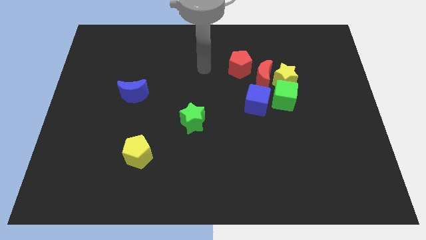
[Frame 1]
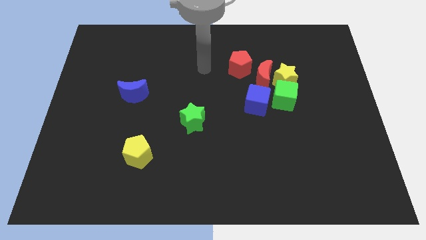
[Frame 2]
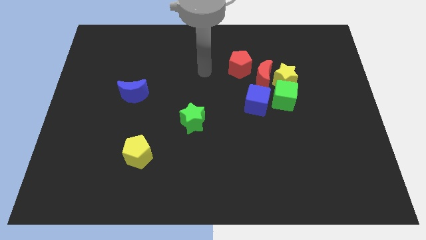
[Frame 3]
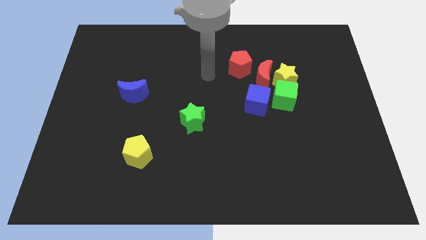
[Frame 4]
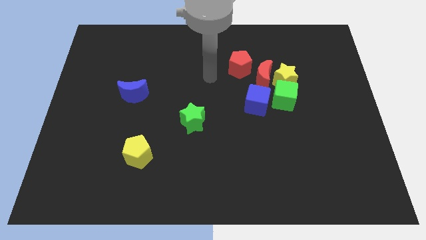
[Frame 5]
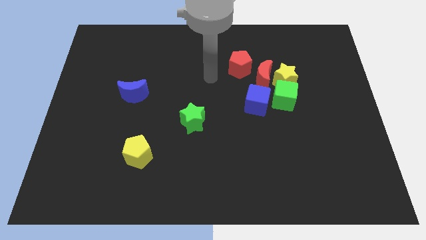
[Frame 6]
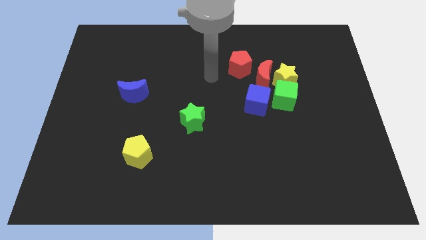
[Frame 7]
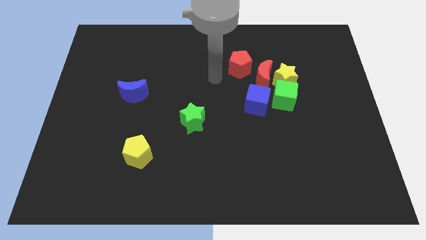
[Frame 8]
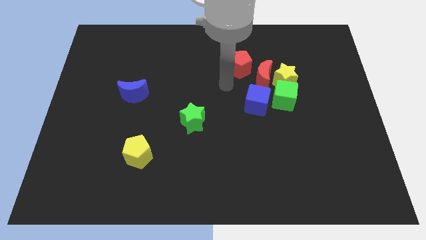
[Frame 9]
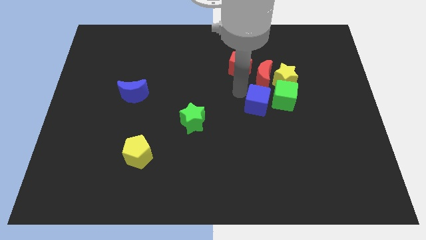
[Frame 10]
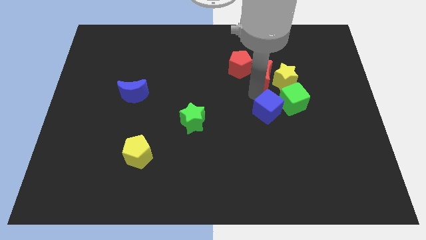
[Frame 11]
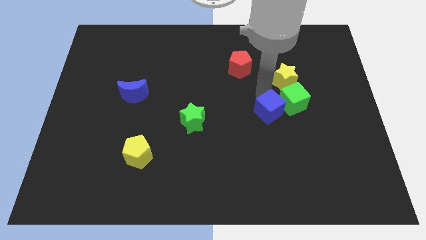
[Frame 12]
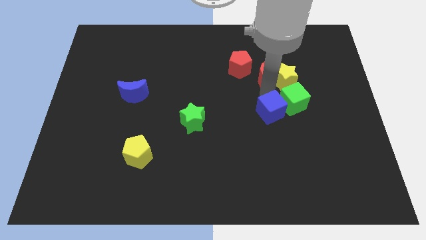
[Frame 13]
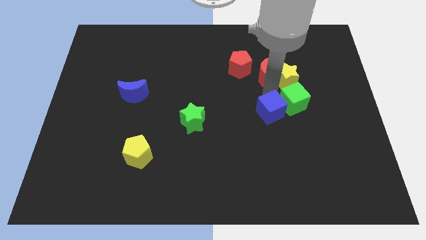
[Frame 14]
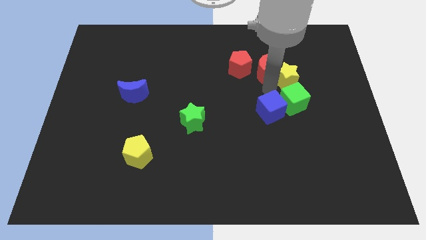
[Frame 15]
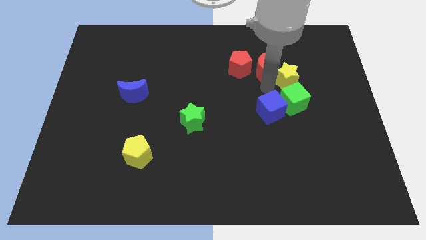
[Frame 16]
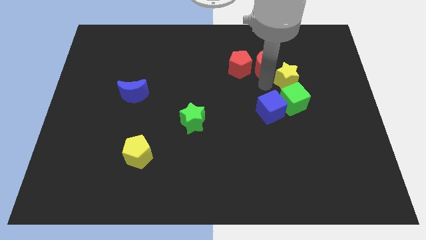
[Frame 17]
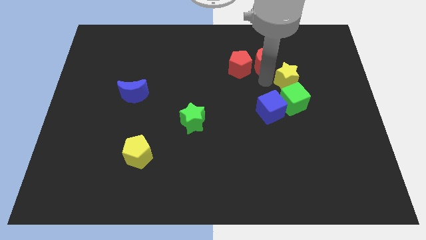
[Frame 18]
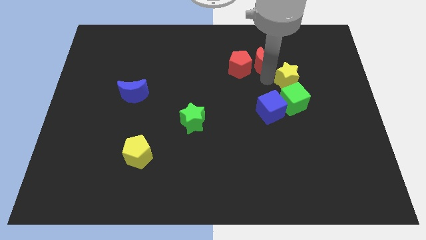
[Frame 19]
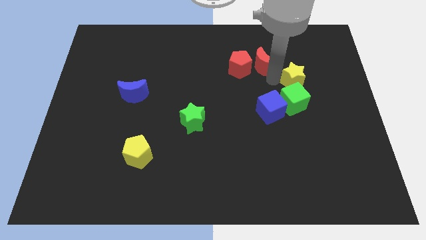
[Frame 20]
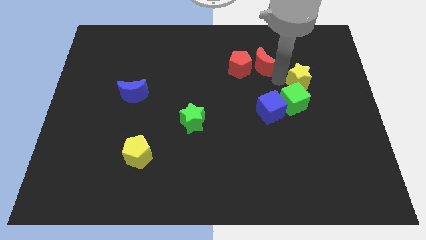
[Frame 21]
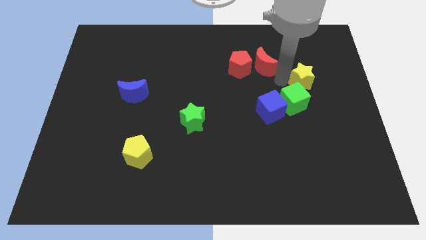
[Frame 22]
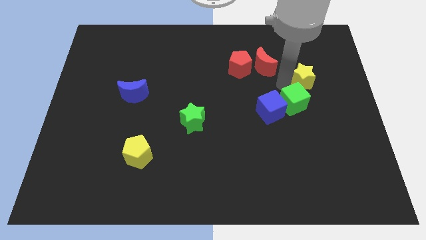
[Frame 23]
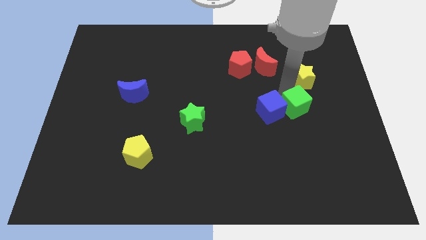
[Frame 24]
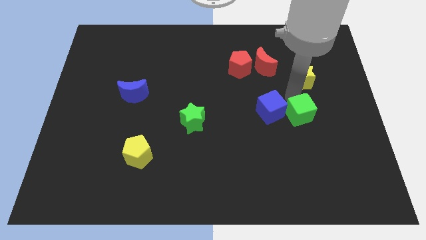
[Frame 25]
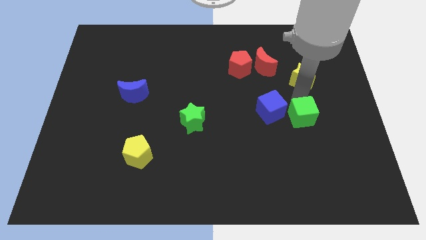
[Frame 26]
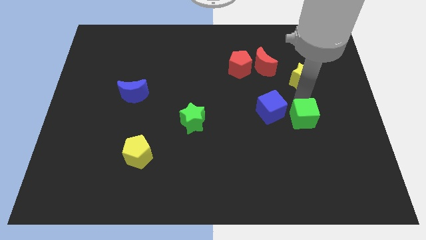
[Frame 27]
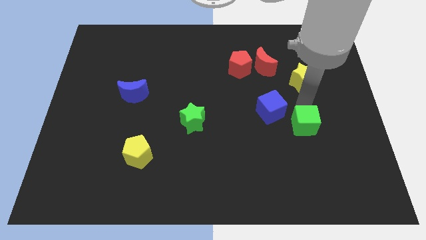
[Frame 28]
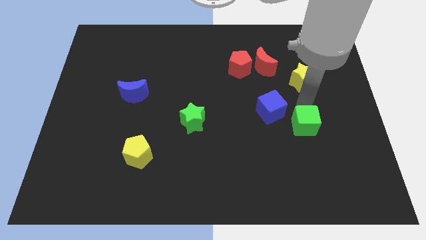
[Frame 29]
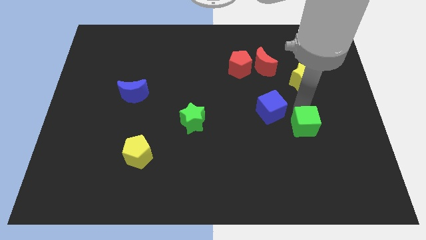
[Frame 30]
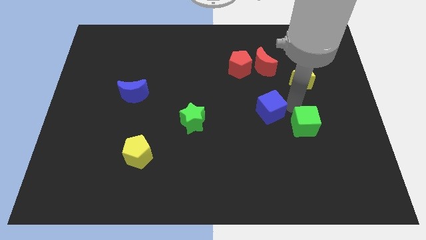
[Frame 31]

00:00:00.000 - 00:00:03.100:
make a semi circle out of red blocks green cube and the yellow star

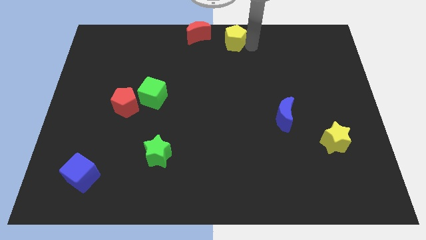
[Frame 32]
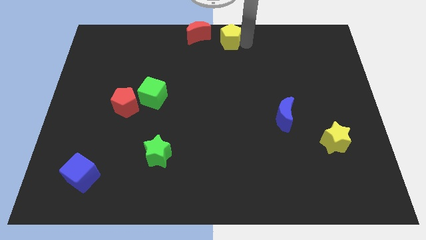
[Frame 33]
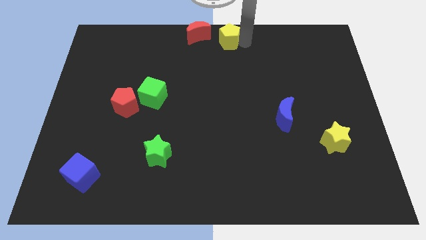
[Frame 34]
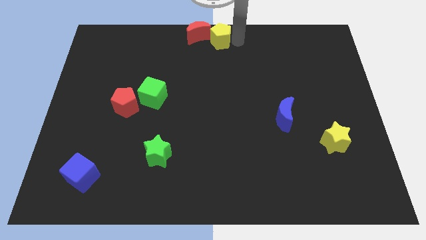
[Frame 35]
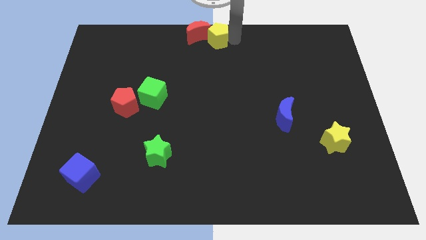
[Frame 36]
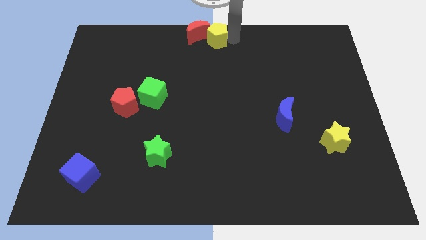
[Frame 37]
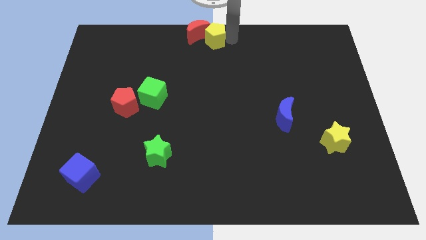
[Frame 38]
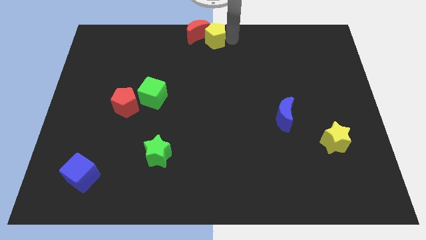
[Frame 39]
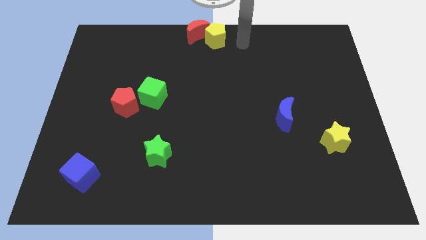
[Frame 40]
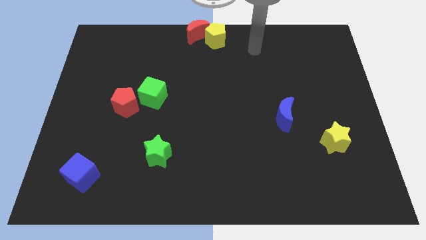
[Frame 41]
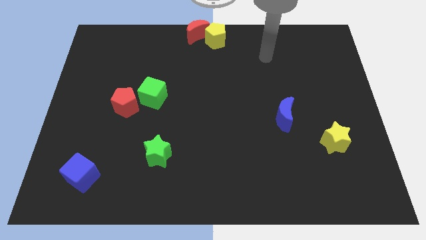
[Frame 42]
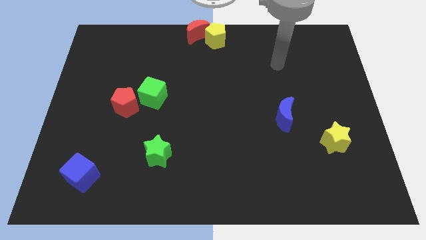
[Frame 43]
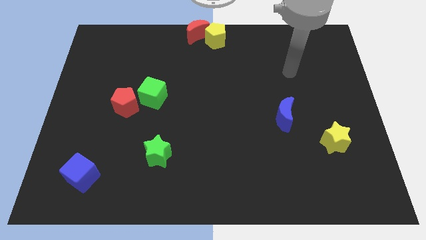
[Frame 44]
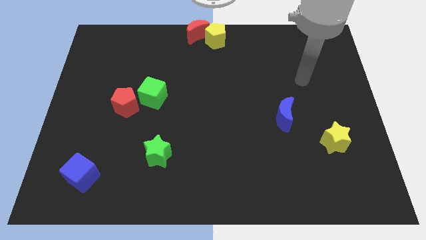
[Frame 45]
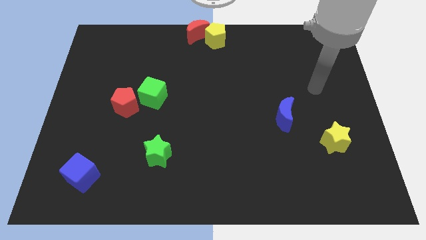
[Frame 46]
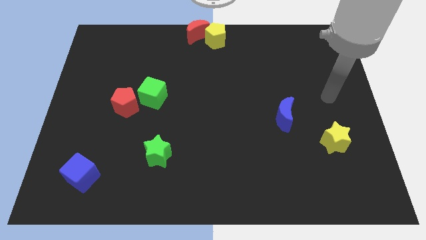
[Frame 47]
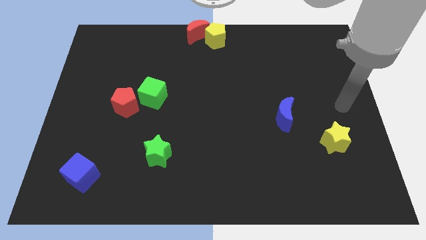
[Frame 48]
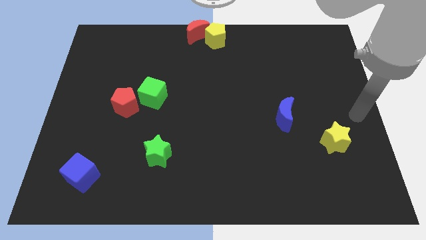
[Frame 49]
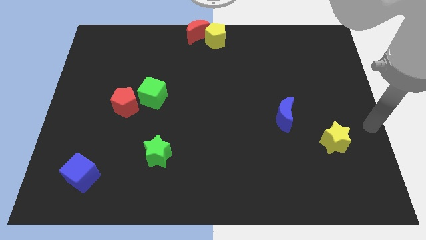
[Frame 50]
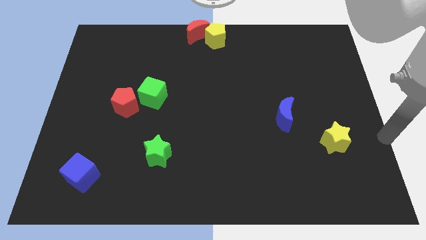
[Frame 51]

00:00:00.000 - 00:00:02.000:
slightly touch red crescent with yellow pentagon

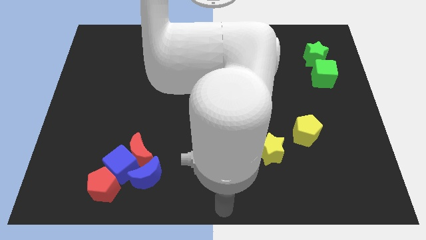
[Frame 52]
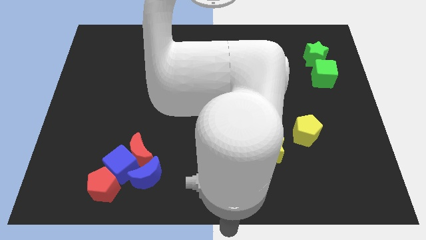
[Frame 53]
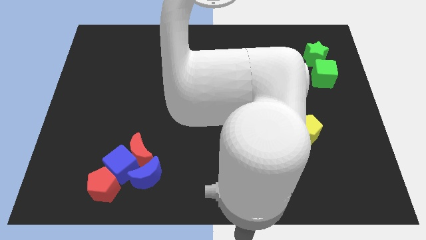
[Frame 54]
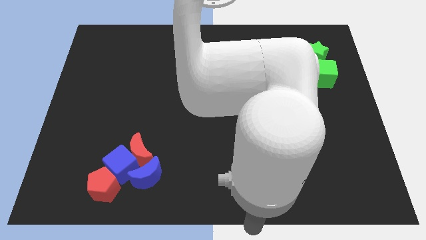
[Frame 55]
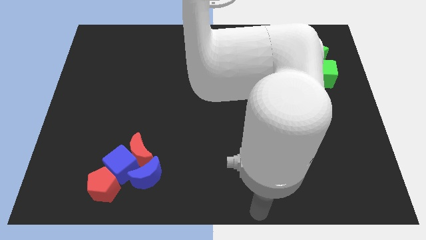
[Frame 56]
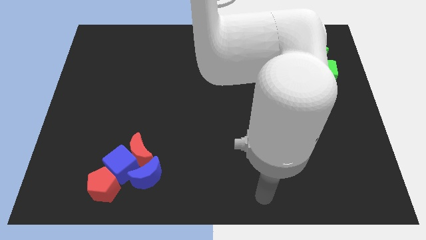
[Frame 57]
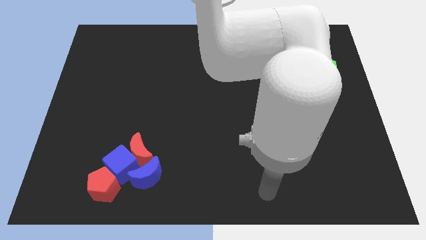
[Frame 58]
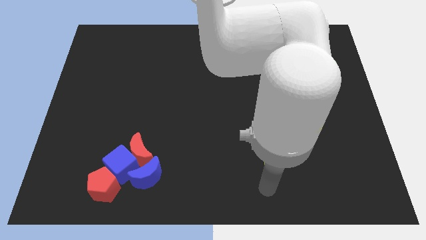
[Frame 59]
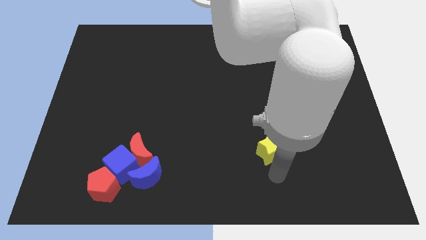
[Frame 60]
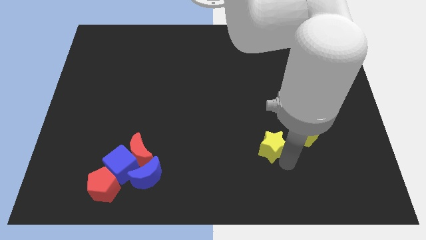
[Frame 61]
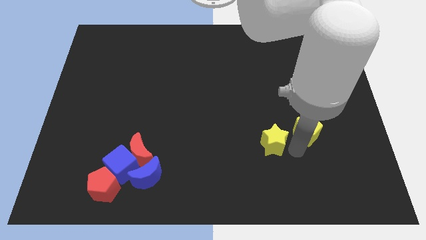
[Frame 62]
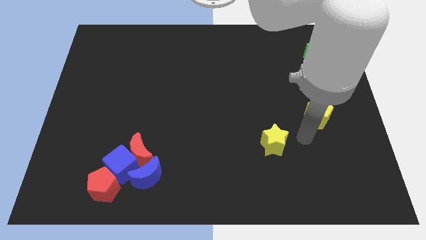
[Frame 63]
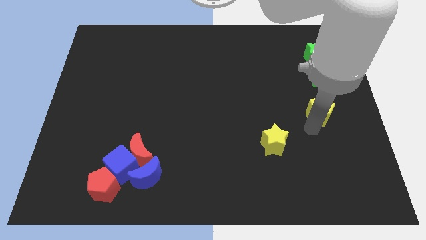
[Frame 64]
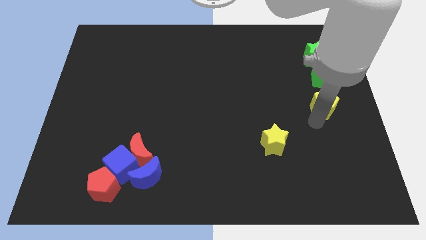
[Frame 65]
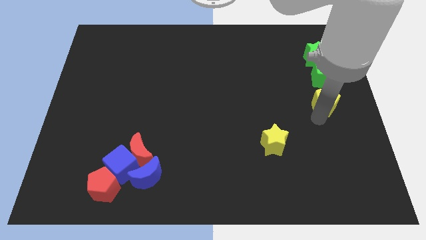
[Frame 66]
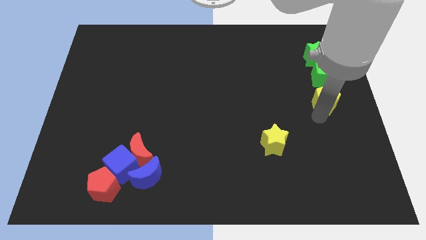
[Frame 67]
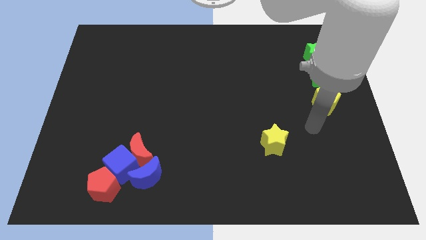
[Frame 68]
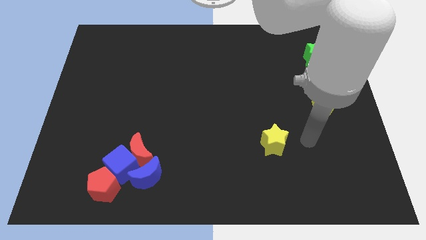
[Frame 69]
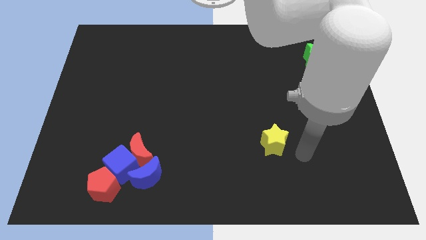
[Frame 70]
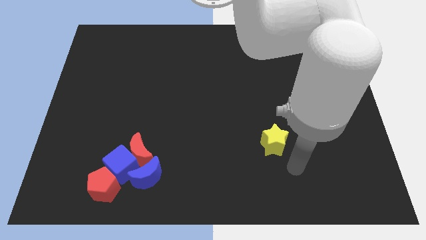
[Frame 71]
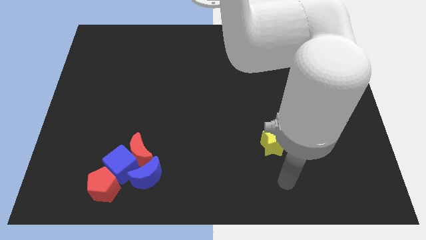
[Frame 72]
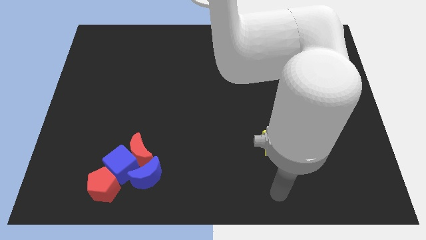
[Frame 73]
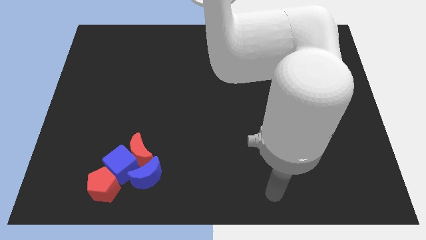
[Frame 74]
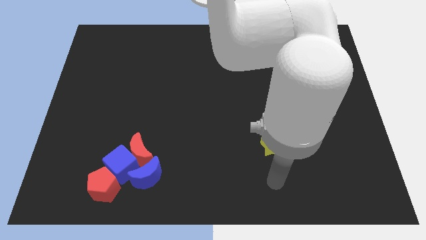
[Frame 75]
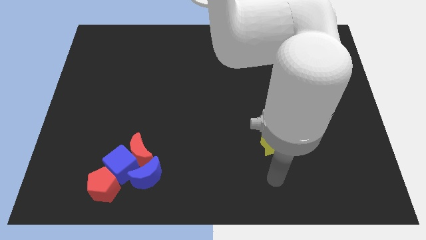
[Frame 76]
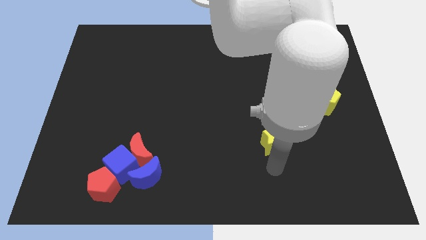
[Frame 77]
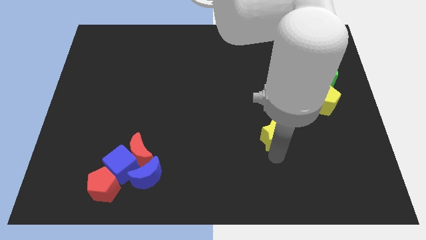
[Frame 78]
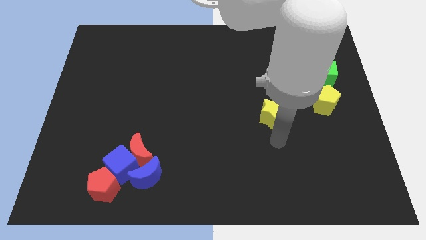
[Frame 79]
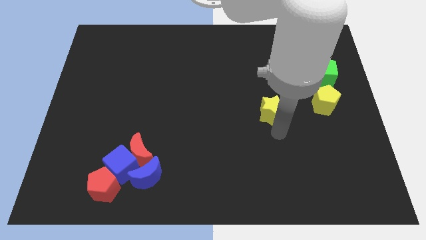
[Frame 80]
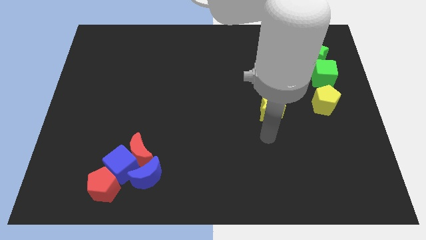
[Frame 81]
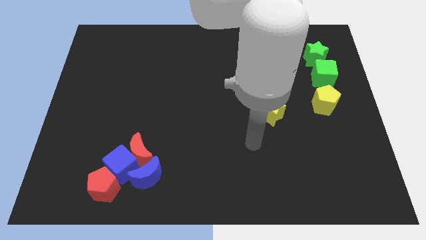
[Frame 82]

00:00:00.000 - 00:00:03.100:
place the yellow pentagon below the green cube

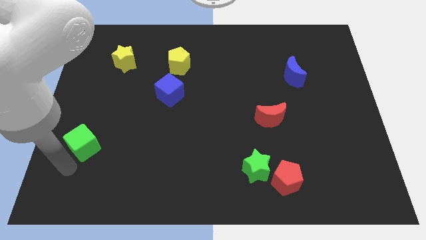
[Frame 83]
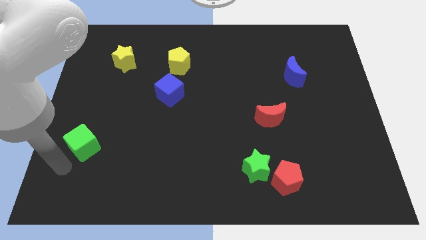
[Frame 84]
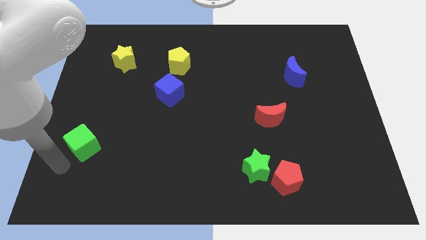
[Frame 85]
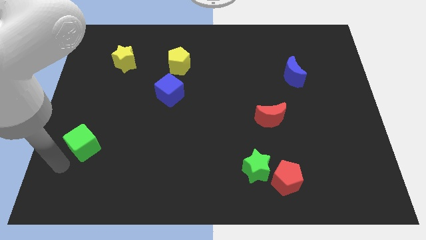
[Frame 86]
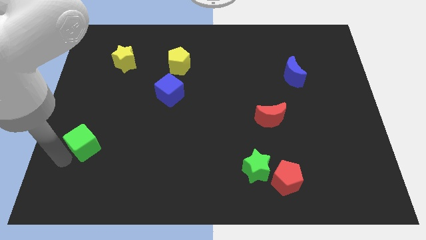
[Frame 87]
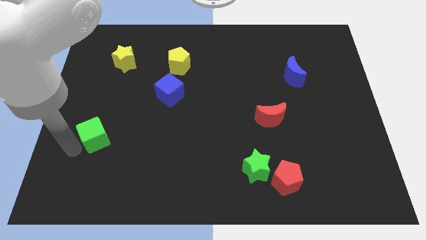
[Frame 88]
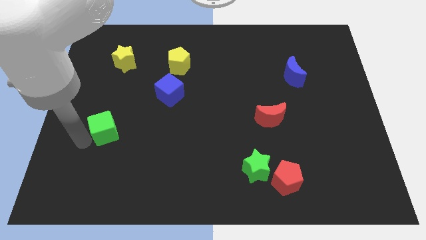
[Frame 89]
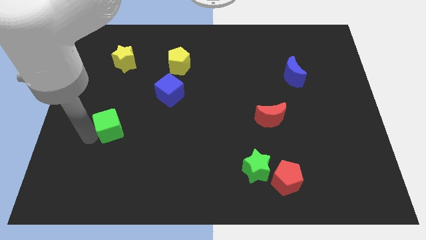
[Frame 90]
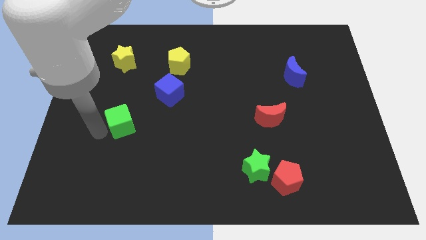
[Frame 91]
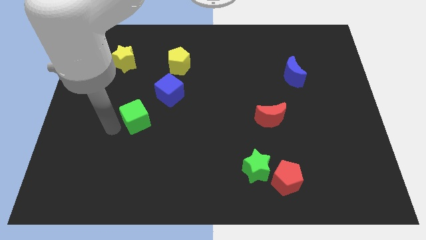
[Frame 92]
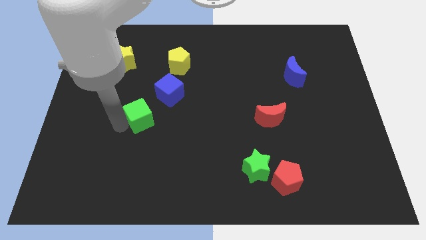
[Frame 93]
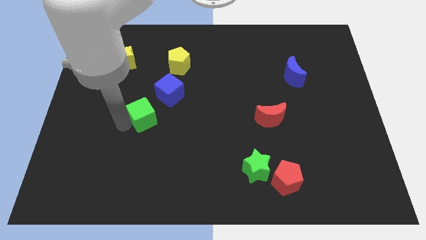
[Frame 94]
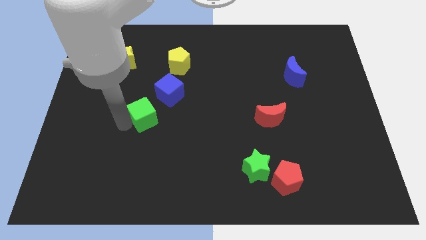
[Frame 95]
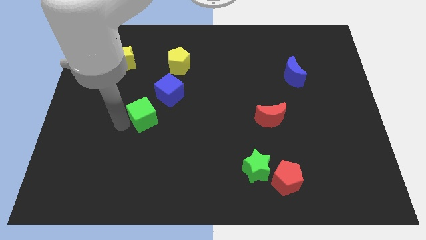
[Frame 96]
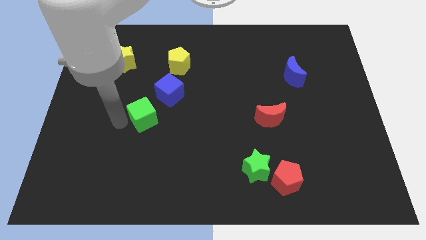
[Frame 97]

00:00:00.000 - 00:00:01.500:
place the green cube left to the red moon
